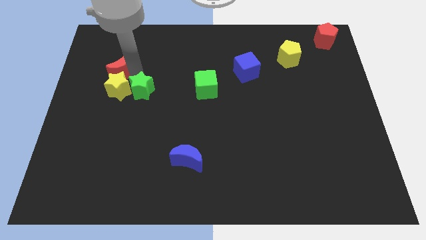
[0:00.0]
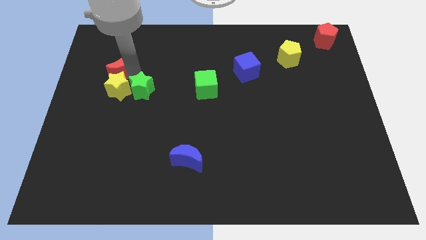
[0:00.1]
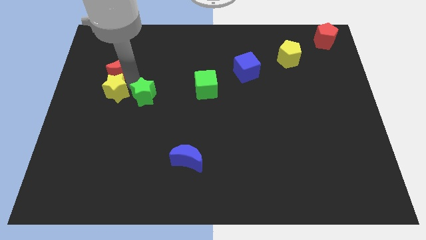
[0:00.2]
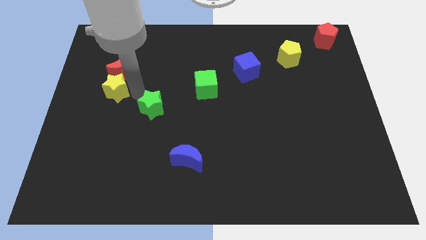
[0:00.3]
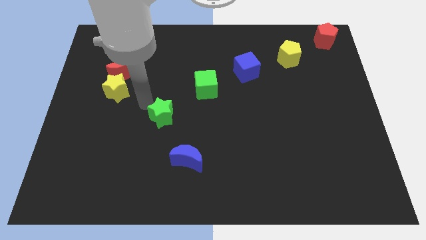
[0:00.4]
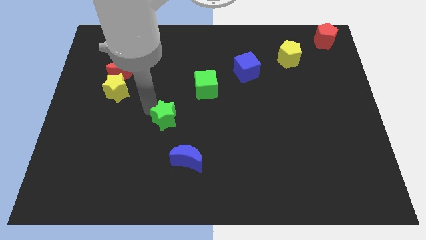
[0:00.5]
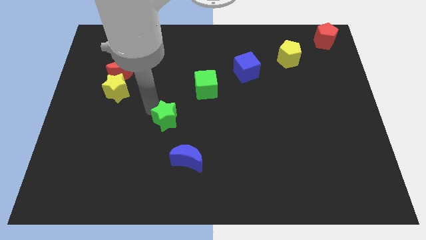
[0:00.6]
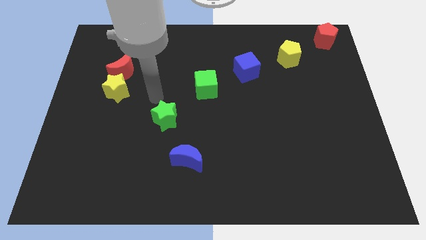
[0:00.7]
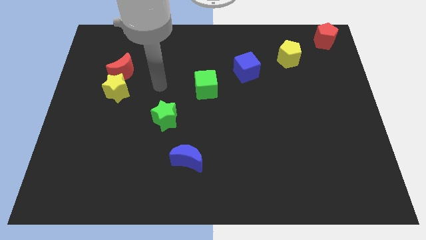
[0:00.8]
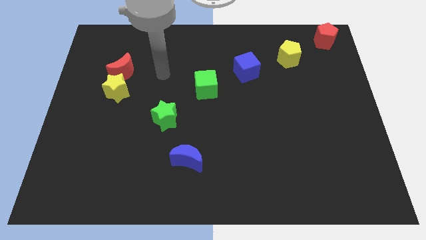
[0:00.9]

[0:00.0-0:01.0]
move green star towards the blue crescent

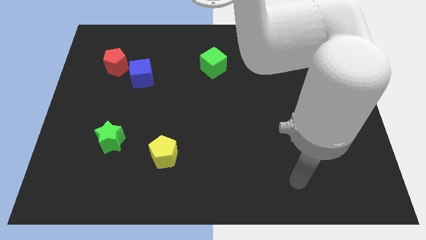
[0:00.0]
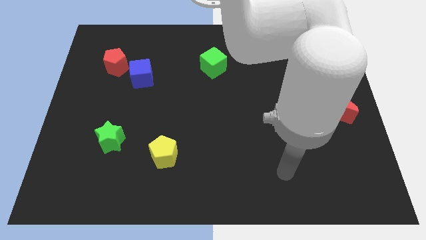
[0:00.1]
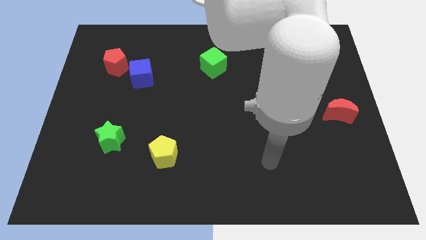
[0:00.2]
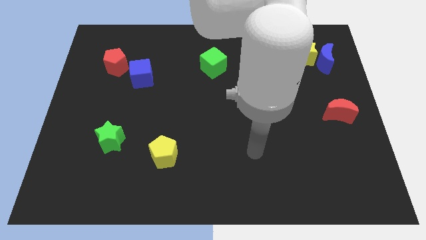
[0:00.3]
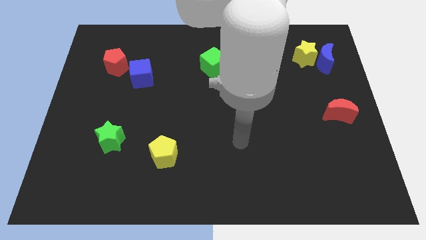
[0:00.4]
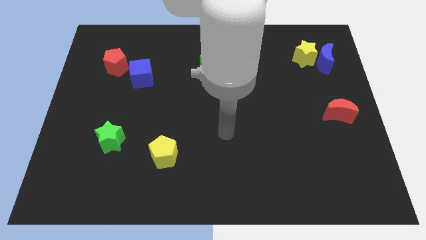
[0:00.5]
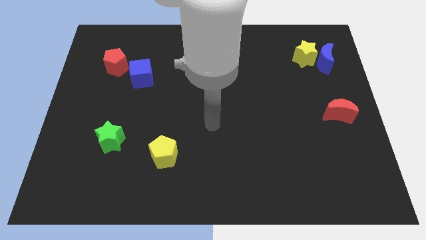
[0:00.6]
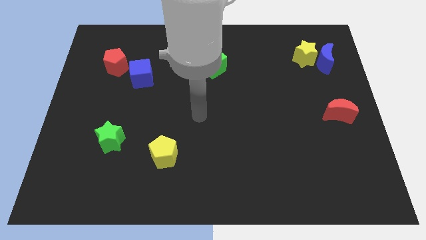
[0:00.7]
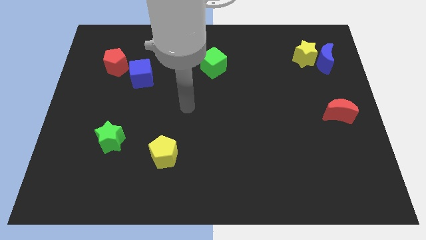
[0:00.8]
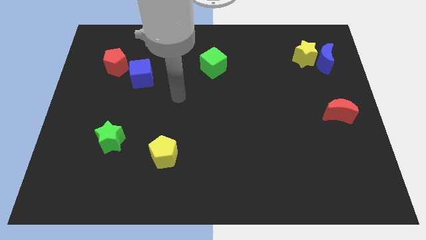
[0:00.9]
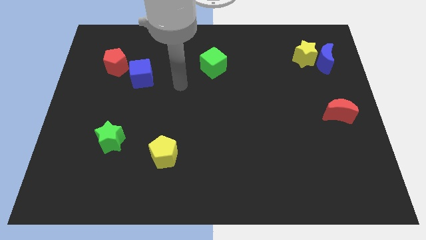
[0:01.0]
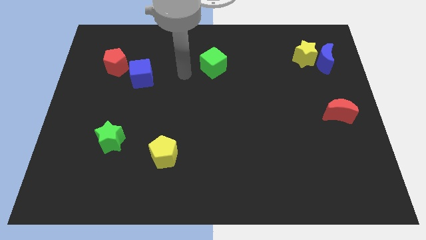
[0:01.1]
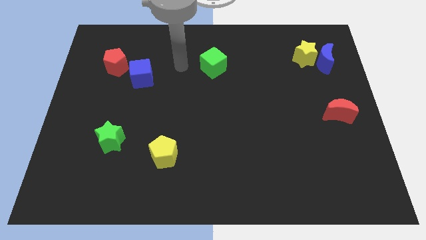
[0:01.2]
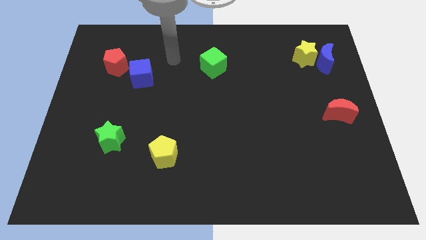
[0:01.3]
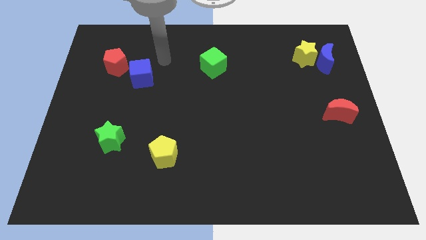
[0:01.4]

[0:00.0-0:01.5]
move your arm towards the blue cube

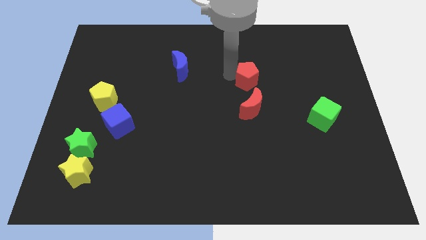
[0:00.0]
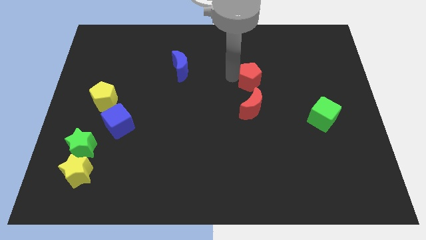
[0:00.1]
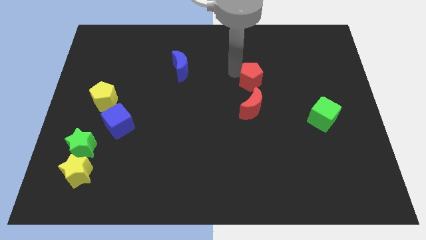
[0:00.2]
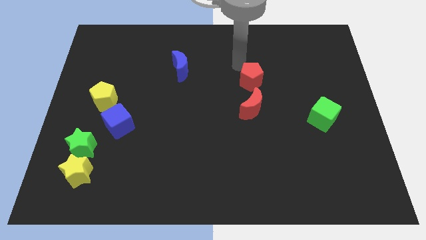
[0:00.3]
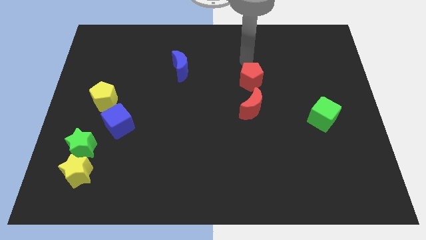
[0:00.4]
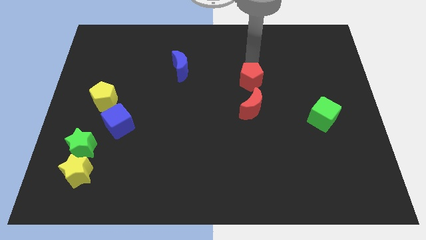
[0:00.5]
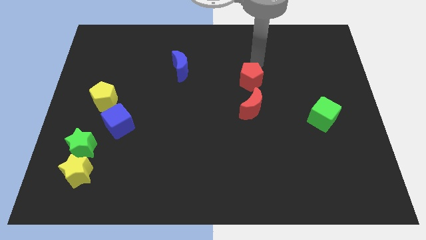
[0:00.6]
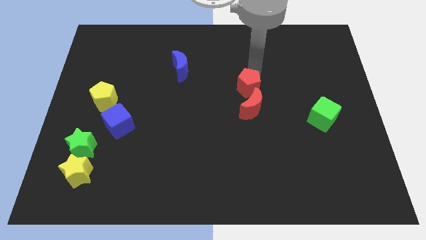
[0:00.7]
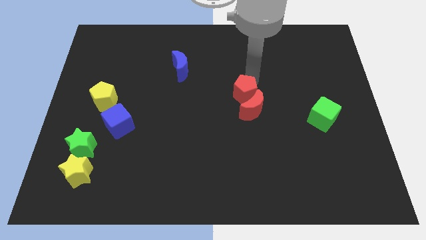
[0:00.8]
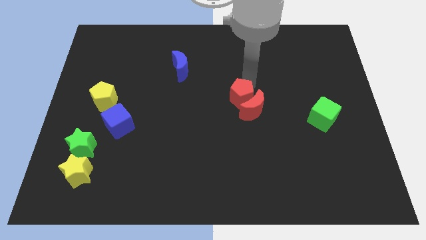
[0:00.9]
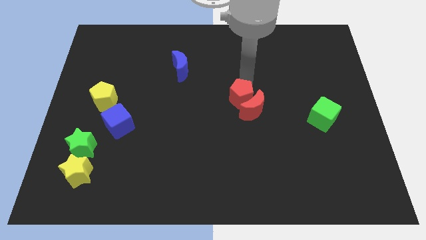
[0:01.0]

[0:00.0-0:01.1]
move the red pentagon into the red crescent

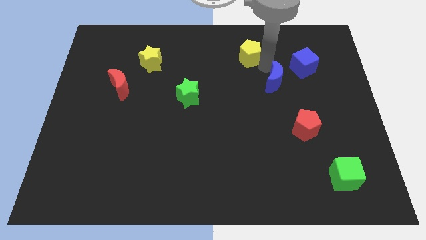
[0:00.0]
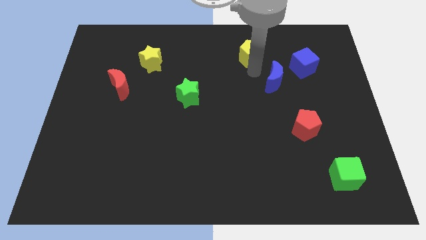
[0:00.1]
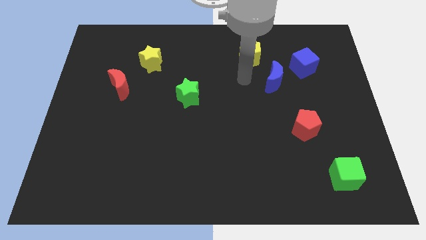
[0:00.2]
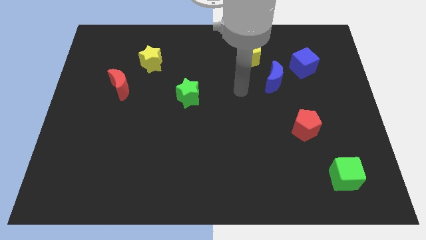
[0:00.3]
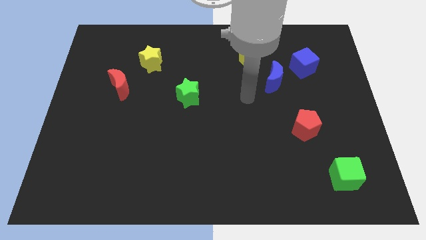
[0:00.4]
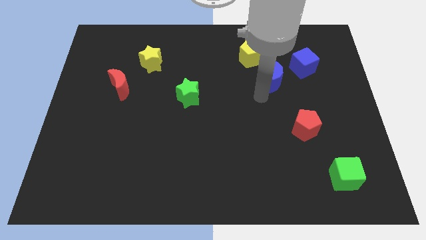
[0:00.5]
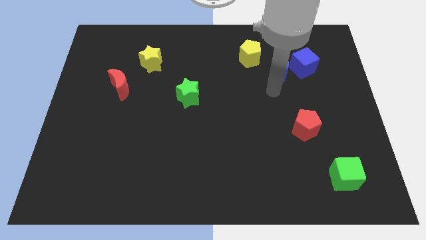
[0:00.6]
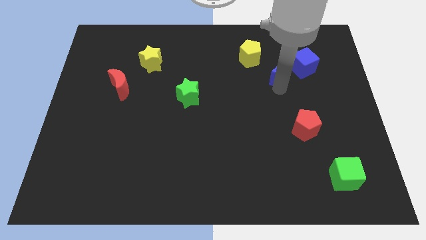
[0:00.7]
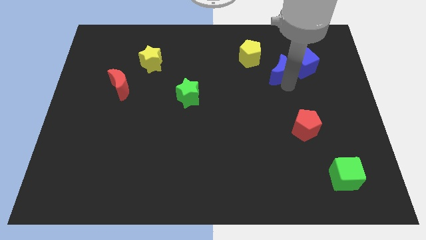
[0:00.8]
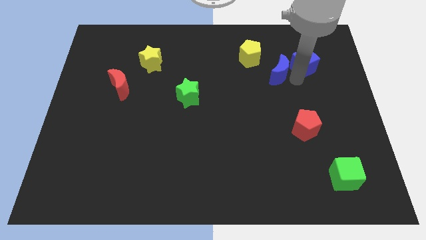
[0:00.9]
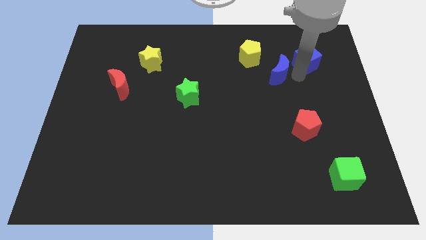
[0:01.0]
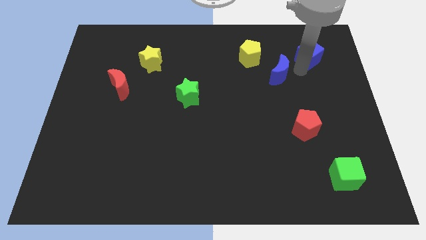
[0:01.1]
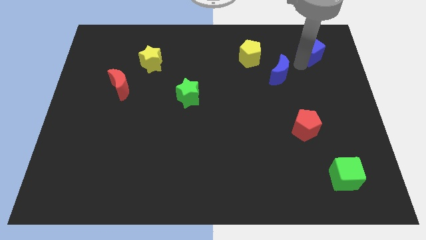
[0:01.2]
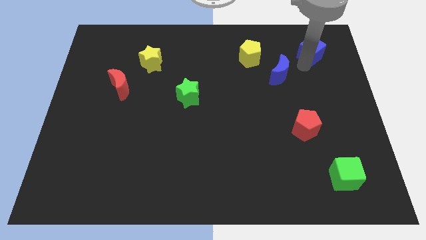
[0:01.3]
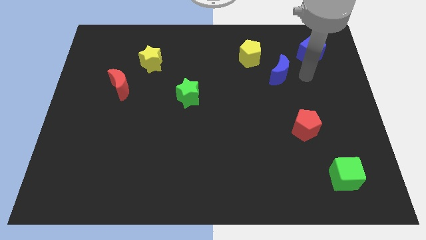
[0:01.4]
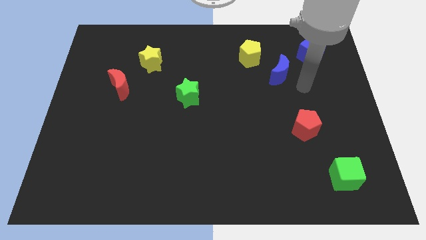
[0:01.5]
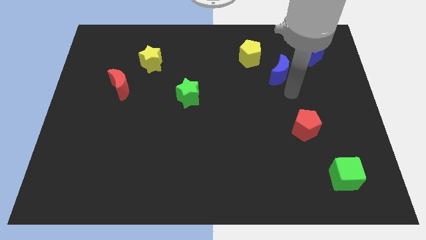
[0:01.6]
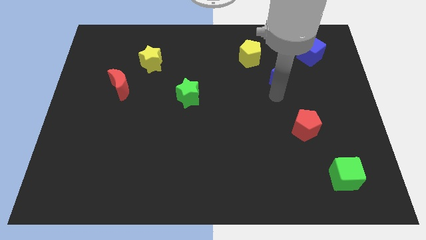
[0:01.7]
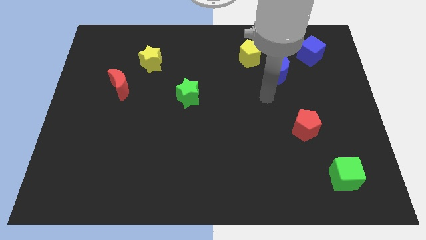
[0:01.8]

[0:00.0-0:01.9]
push the blue cube towards the top right corner of the board

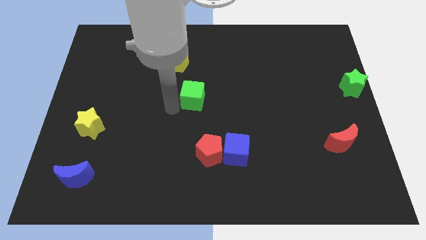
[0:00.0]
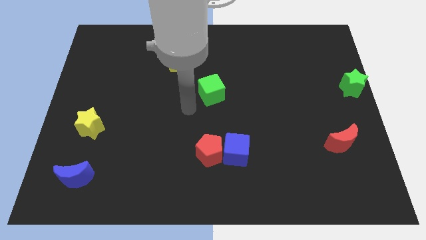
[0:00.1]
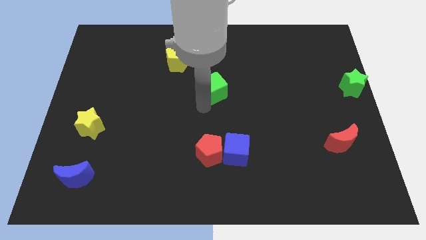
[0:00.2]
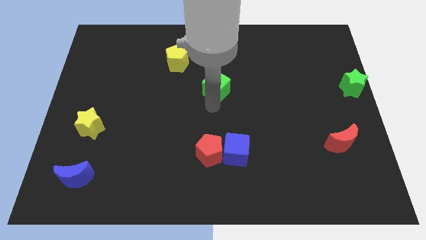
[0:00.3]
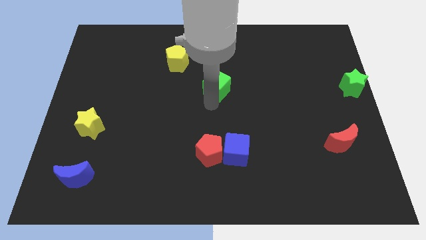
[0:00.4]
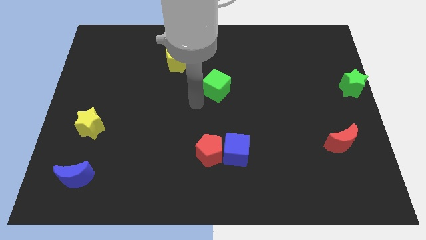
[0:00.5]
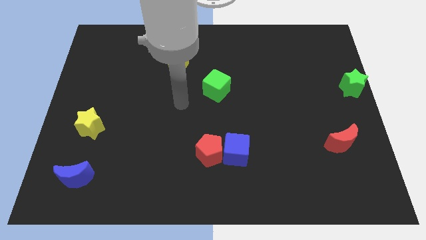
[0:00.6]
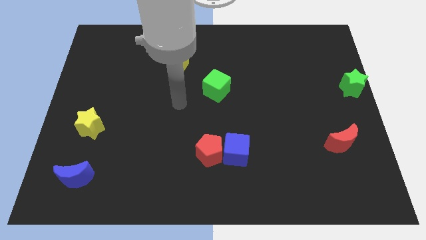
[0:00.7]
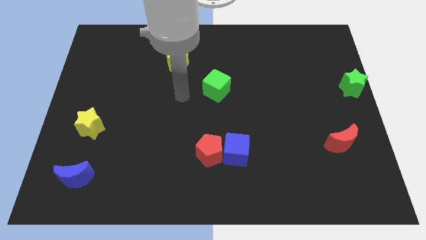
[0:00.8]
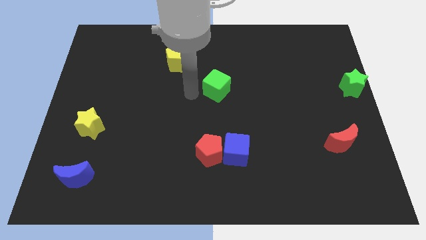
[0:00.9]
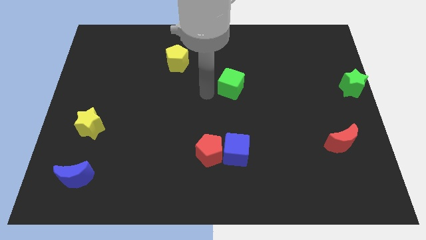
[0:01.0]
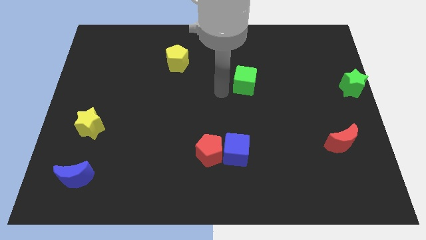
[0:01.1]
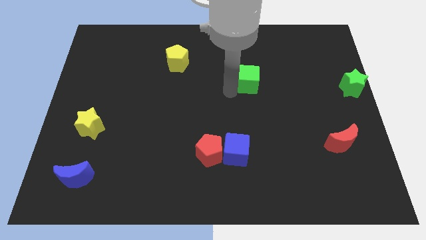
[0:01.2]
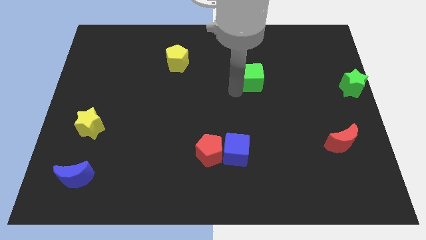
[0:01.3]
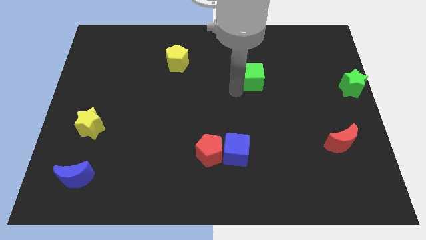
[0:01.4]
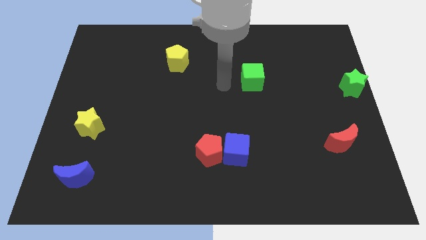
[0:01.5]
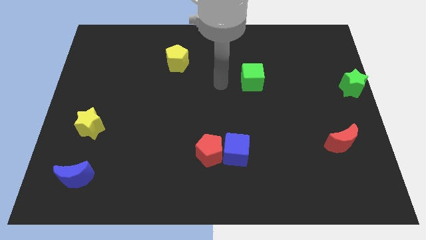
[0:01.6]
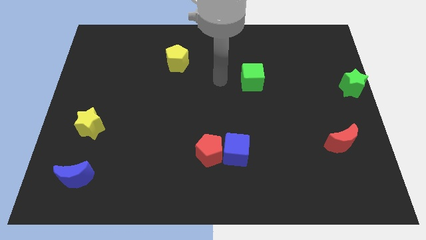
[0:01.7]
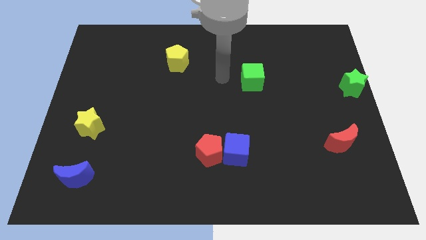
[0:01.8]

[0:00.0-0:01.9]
push the green cube in between to the yellow pentagon and green star

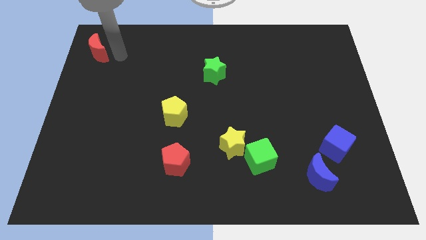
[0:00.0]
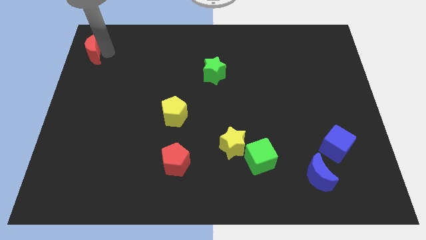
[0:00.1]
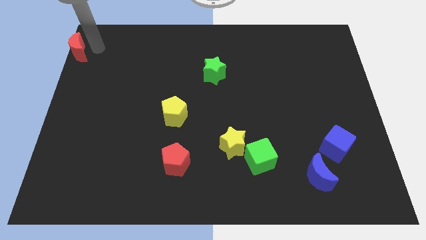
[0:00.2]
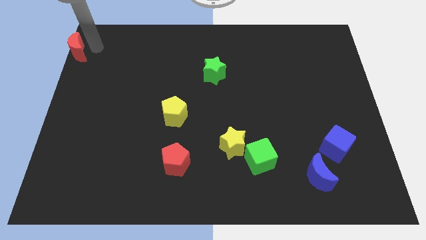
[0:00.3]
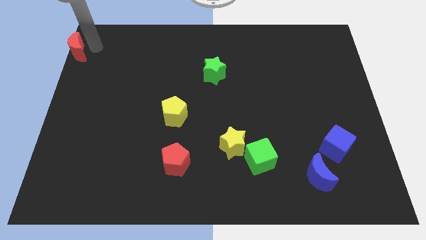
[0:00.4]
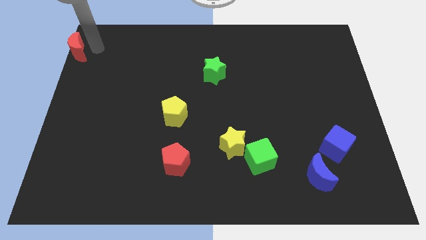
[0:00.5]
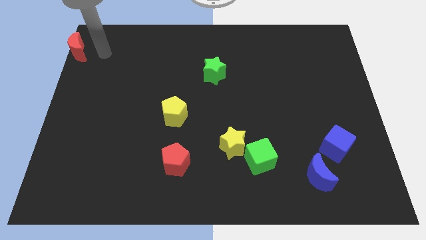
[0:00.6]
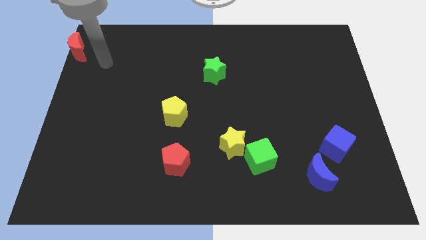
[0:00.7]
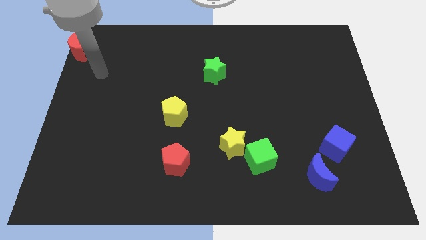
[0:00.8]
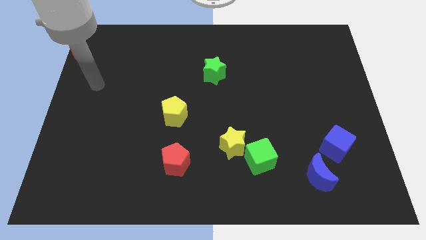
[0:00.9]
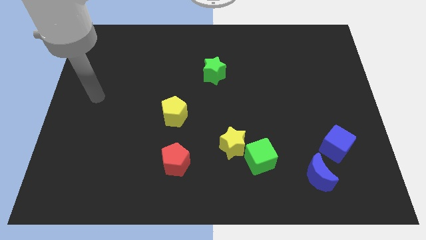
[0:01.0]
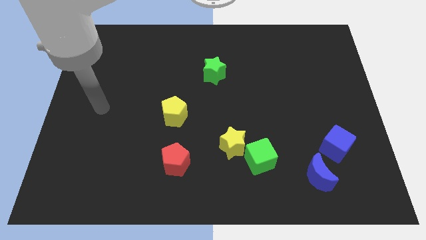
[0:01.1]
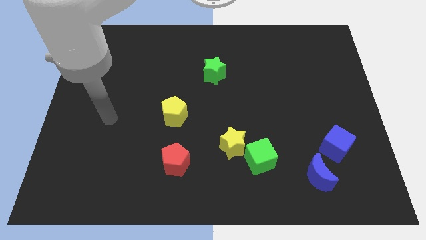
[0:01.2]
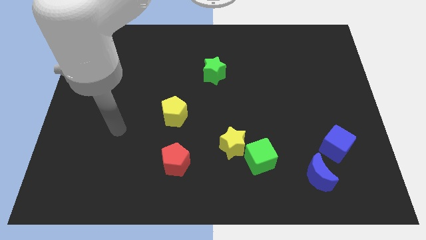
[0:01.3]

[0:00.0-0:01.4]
move the red moon towards the left corner
